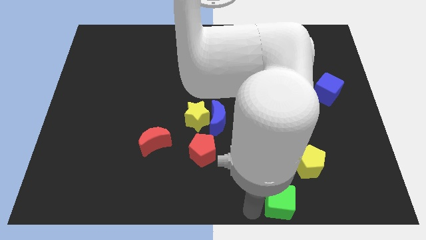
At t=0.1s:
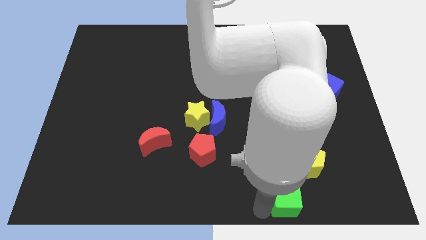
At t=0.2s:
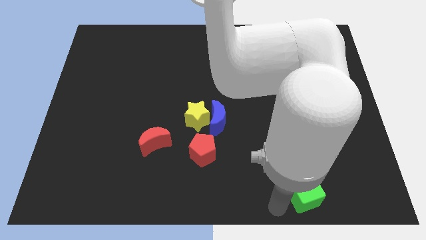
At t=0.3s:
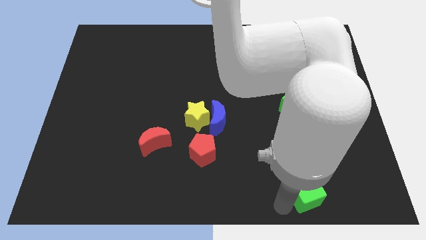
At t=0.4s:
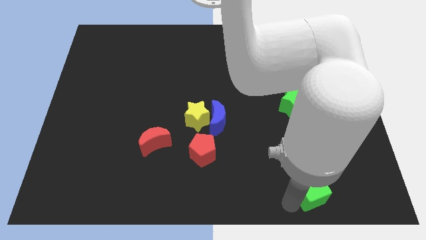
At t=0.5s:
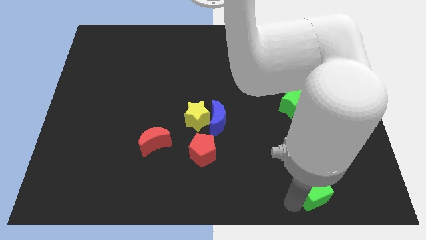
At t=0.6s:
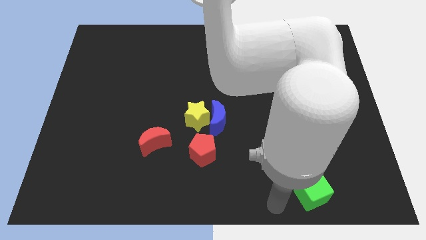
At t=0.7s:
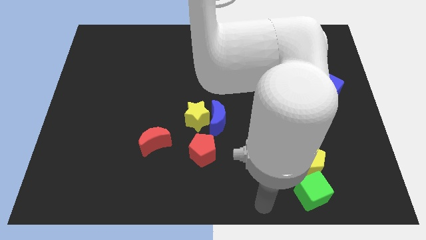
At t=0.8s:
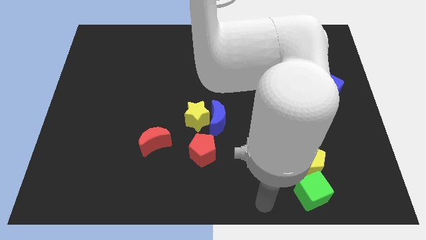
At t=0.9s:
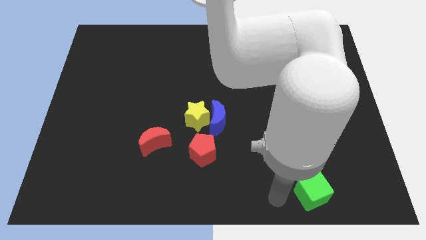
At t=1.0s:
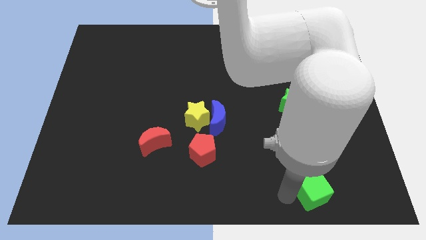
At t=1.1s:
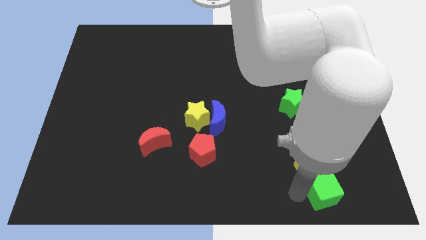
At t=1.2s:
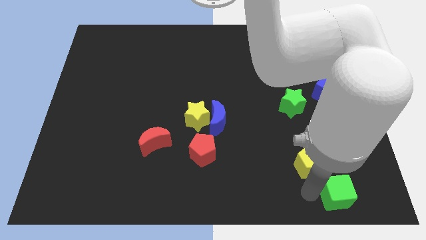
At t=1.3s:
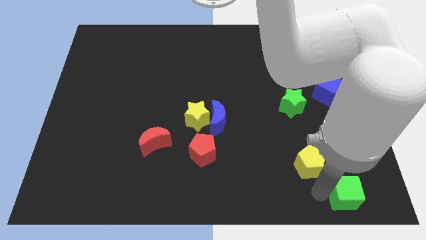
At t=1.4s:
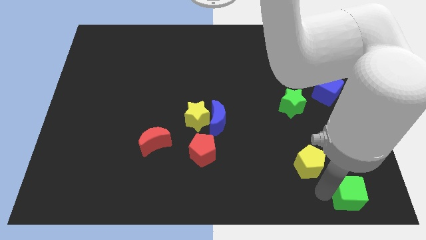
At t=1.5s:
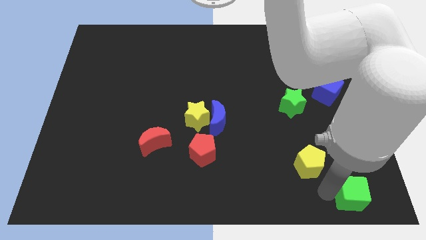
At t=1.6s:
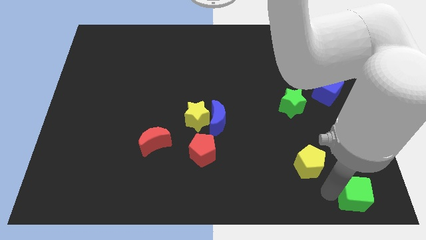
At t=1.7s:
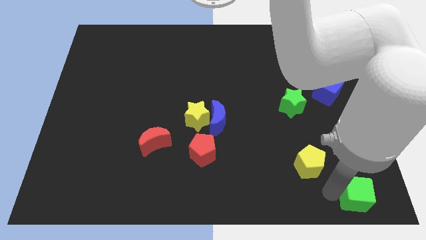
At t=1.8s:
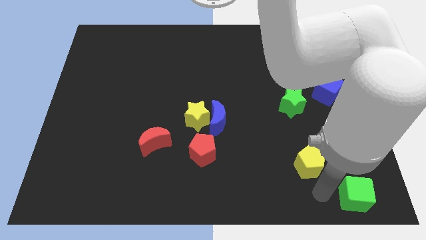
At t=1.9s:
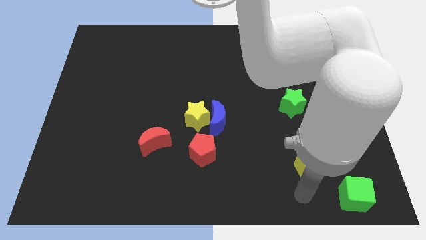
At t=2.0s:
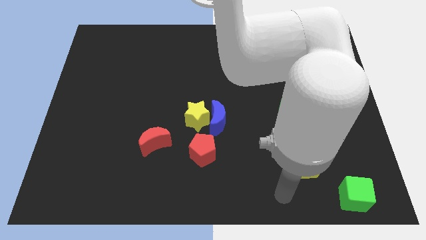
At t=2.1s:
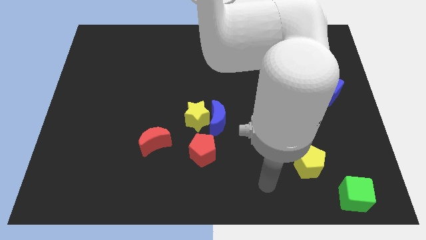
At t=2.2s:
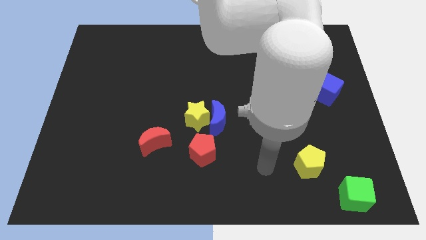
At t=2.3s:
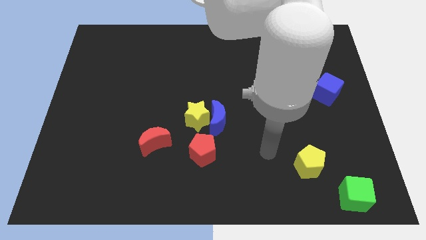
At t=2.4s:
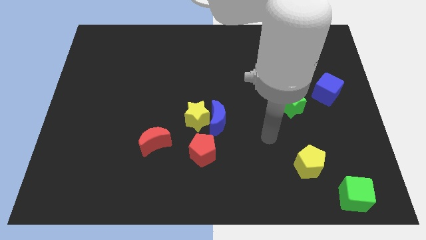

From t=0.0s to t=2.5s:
push the green cube to the bottom right of the board

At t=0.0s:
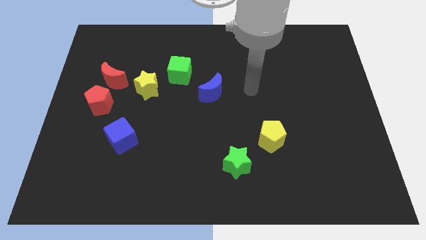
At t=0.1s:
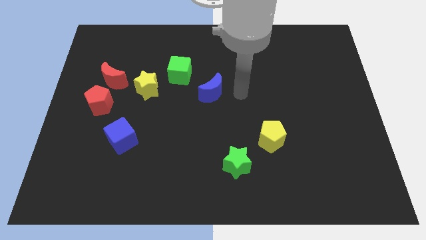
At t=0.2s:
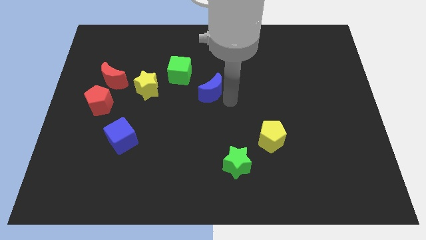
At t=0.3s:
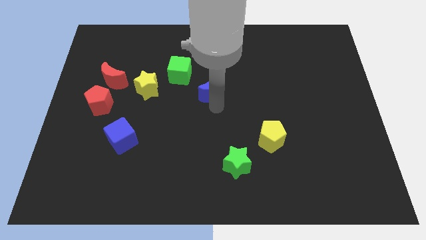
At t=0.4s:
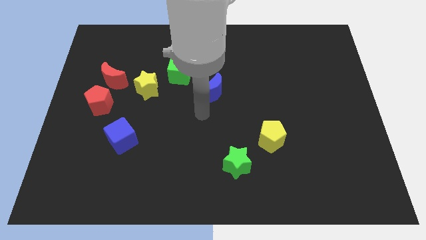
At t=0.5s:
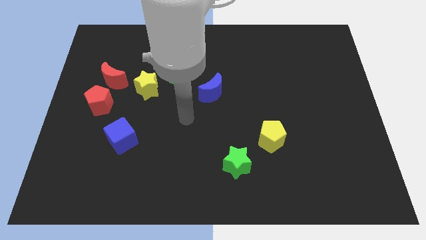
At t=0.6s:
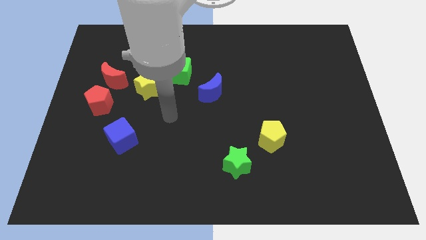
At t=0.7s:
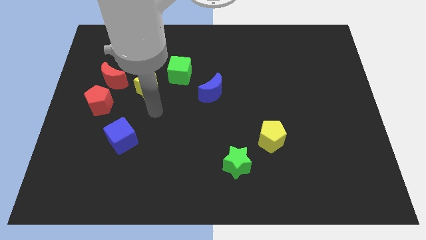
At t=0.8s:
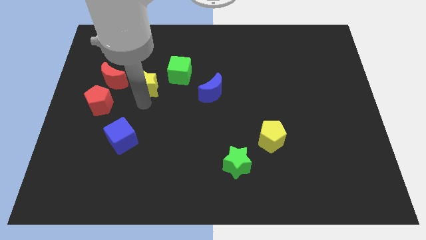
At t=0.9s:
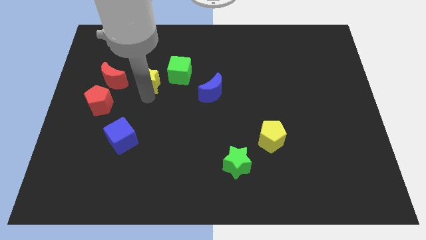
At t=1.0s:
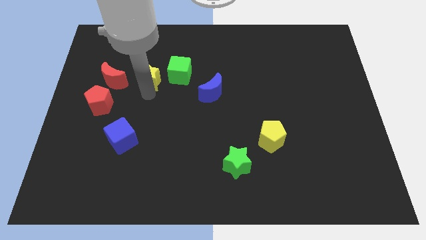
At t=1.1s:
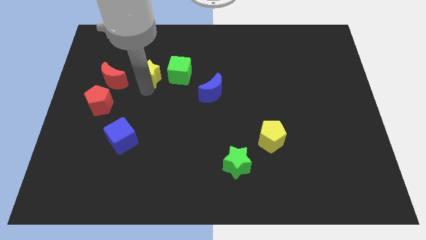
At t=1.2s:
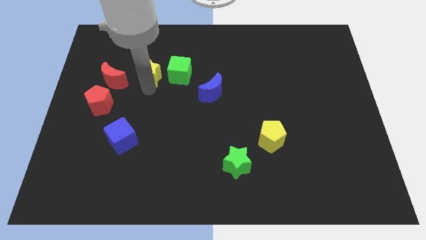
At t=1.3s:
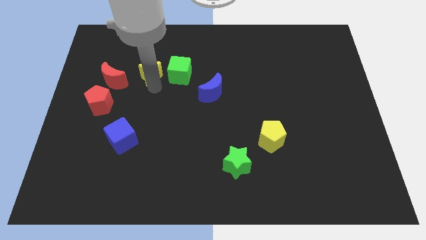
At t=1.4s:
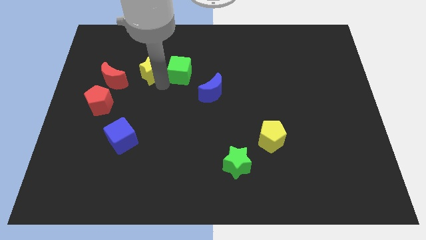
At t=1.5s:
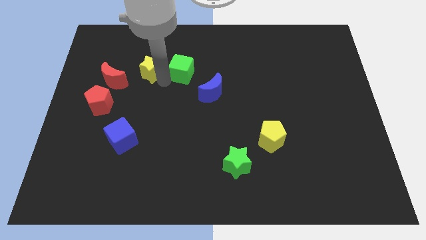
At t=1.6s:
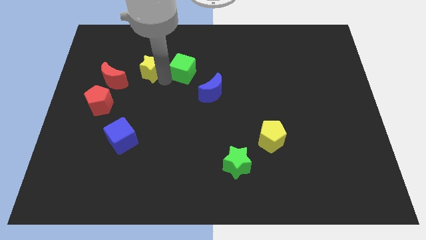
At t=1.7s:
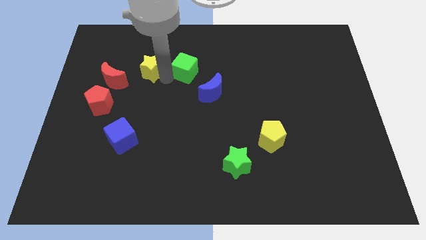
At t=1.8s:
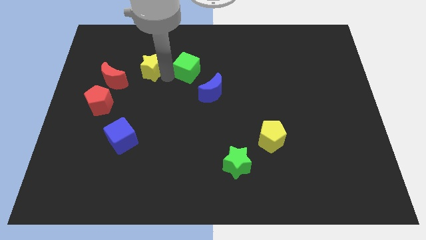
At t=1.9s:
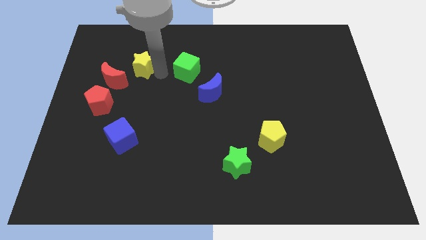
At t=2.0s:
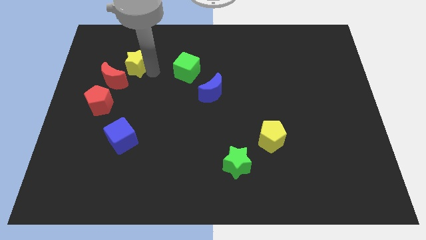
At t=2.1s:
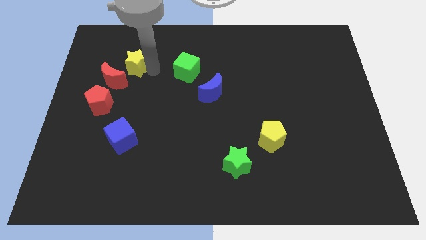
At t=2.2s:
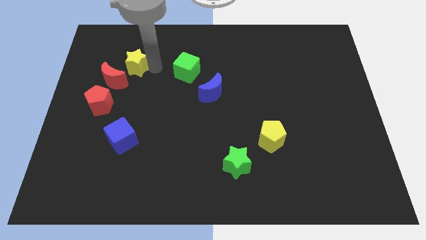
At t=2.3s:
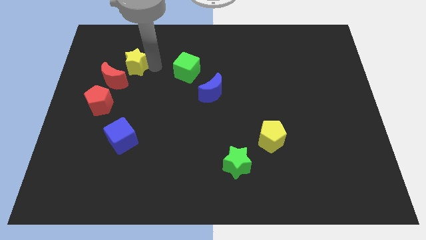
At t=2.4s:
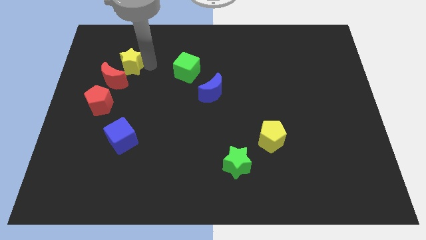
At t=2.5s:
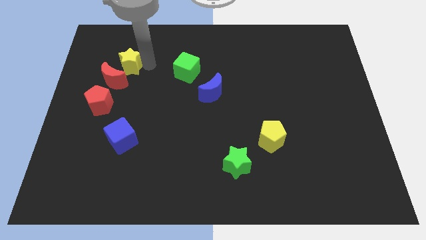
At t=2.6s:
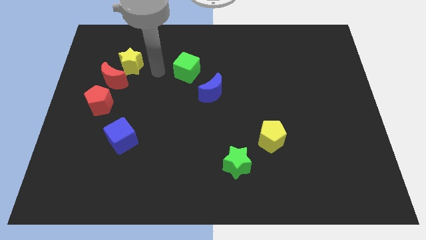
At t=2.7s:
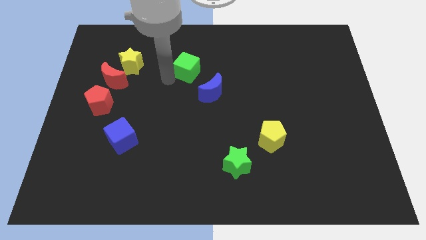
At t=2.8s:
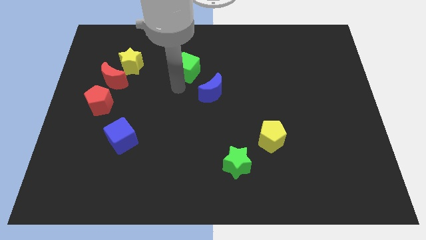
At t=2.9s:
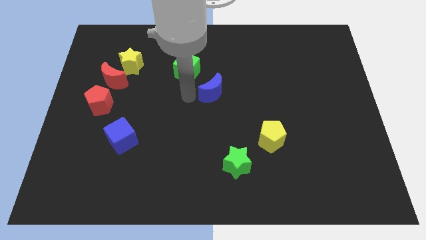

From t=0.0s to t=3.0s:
put the yellow star to the top right side of the red crescent

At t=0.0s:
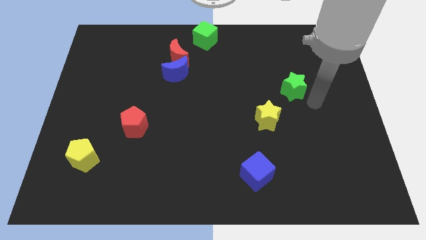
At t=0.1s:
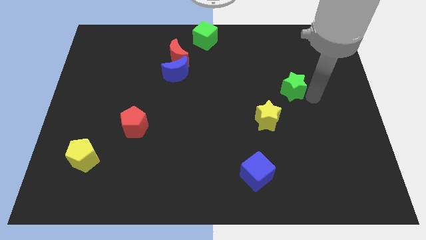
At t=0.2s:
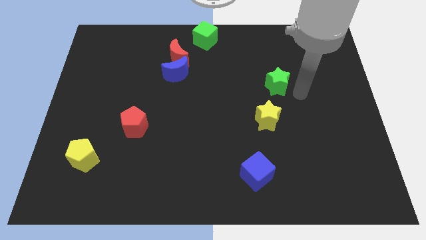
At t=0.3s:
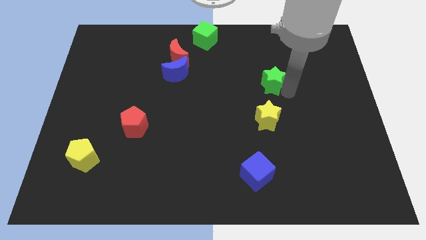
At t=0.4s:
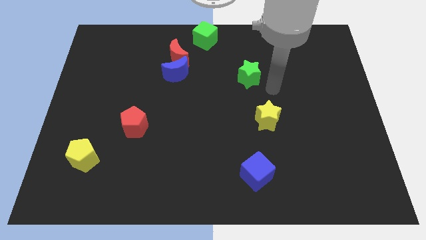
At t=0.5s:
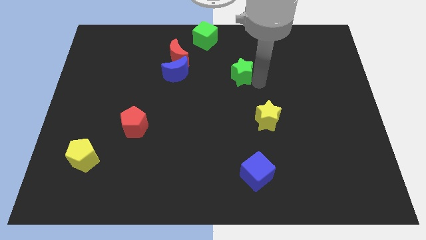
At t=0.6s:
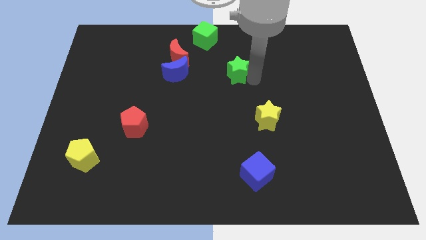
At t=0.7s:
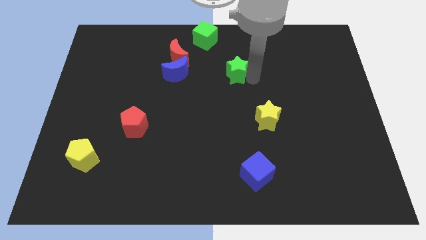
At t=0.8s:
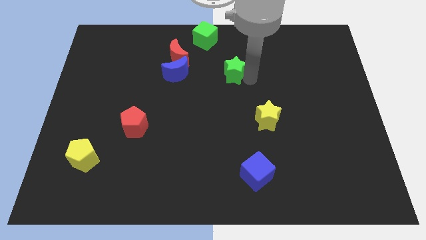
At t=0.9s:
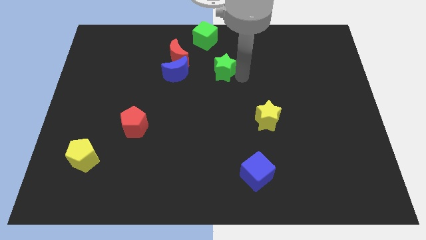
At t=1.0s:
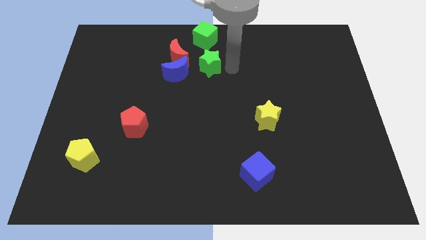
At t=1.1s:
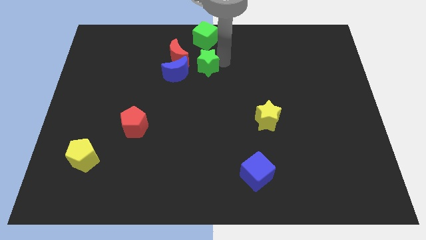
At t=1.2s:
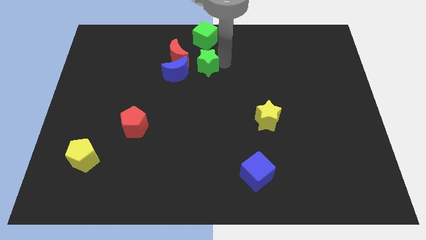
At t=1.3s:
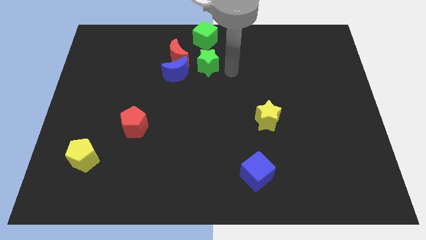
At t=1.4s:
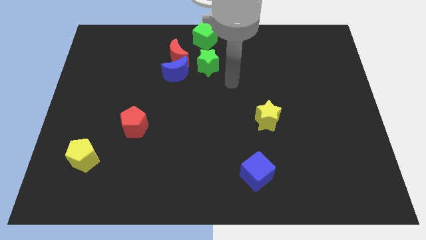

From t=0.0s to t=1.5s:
put the green star below the green cube

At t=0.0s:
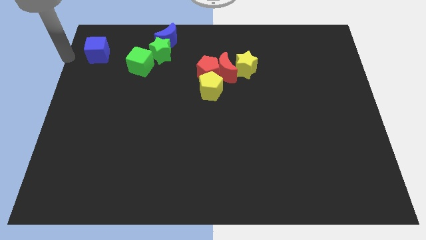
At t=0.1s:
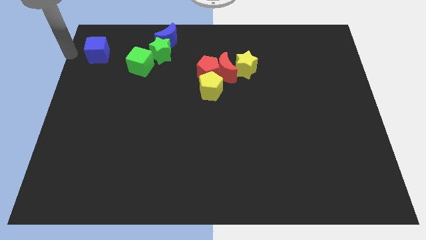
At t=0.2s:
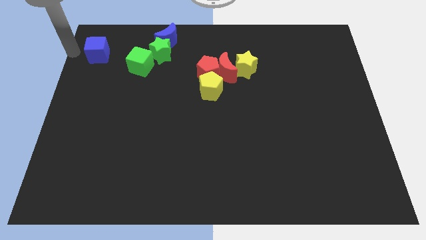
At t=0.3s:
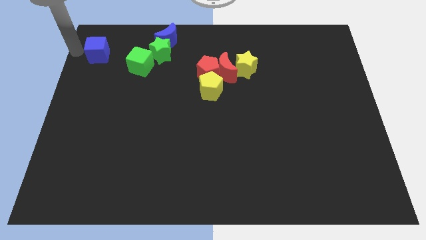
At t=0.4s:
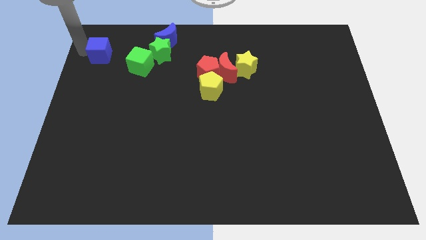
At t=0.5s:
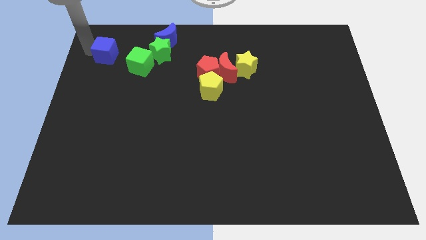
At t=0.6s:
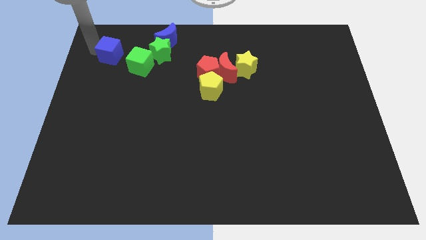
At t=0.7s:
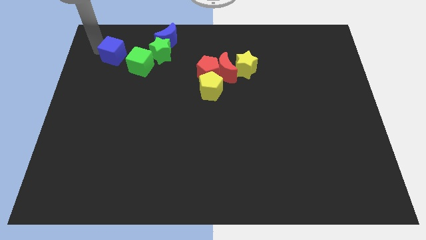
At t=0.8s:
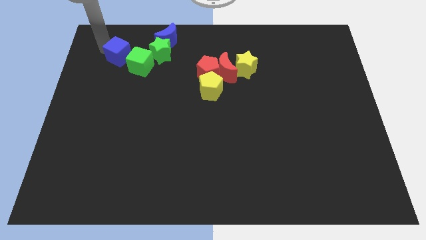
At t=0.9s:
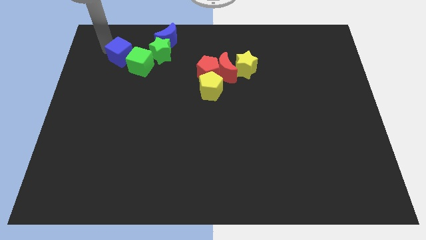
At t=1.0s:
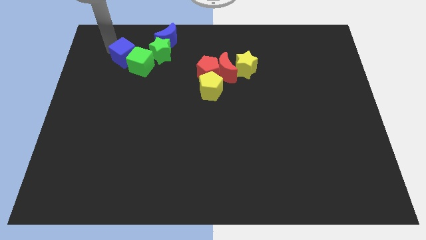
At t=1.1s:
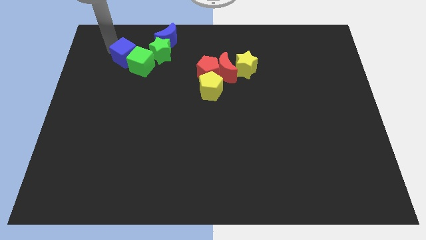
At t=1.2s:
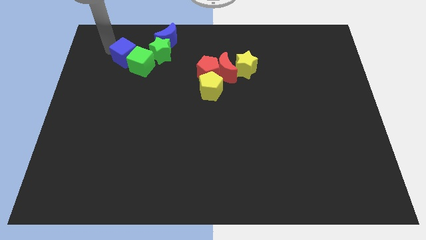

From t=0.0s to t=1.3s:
push the blue cube to the group of blocks

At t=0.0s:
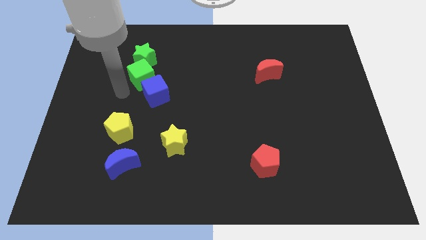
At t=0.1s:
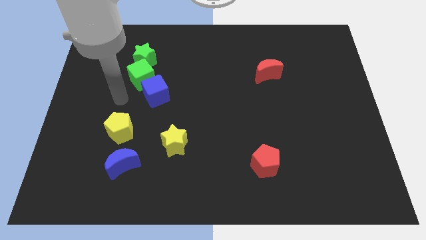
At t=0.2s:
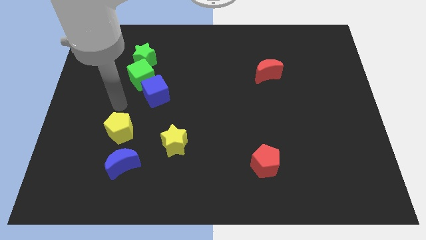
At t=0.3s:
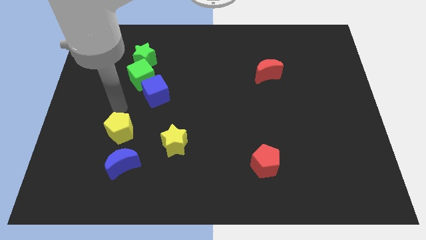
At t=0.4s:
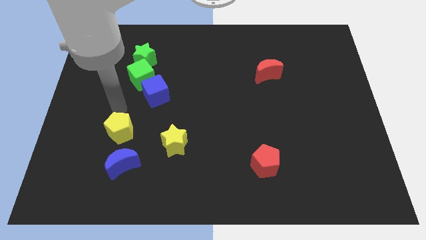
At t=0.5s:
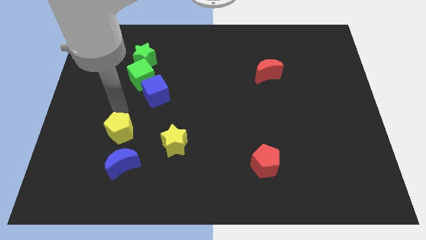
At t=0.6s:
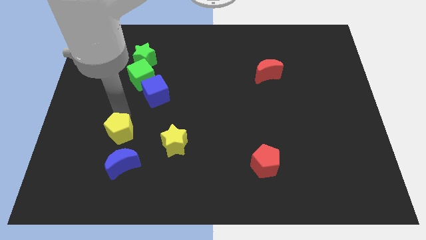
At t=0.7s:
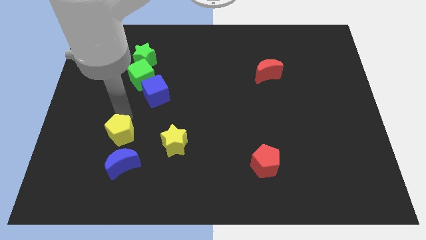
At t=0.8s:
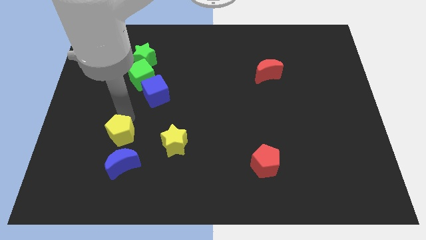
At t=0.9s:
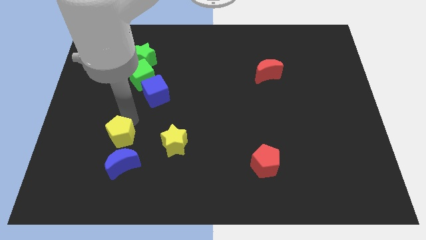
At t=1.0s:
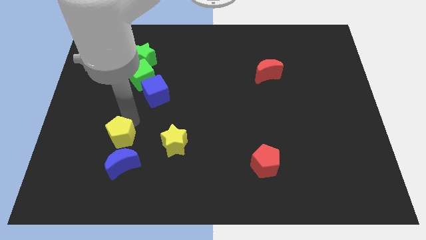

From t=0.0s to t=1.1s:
push the yellow pentagon slightly towards the top side of the blue crescent
